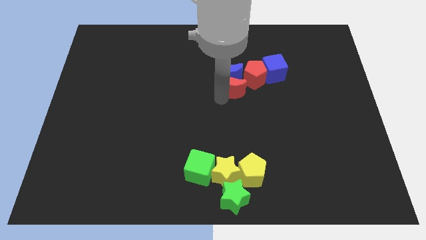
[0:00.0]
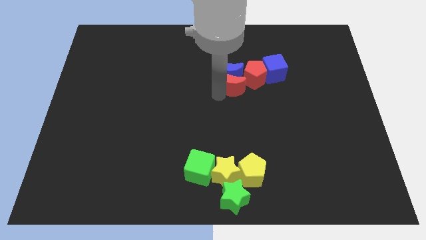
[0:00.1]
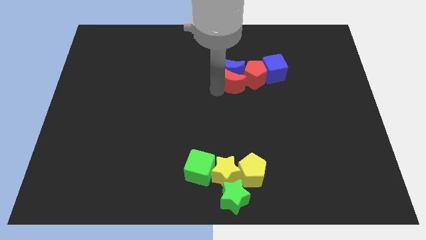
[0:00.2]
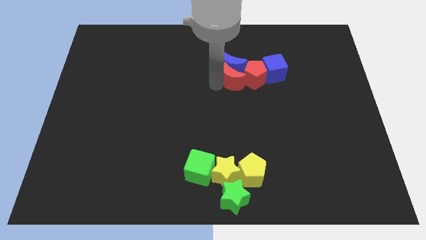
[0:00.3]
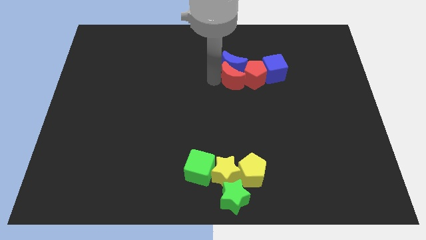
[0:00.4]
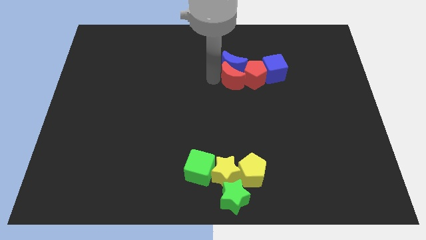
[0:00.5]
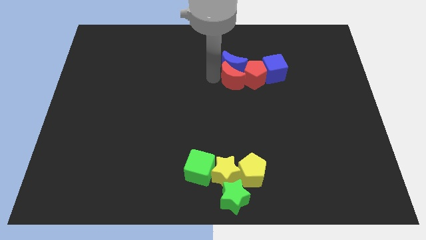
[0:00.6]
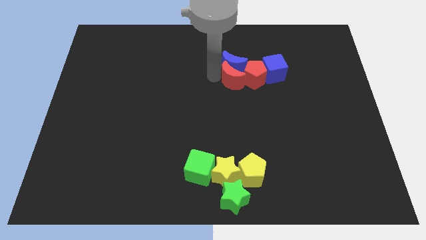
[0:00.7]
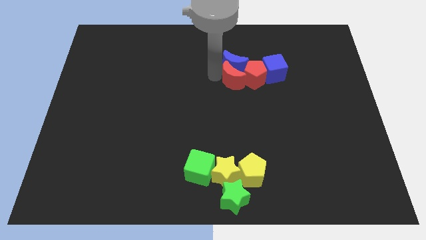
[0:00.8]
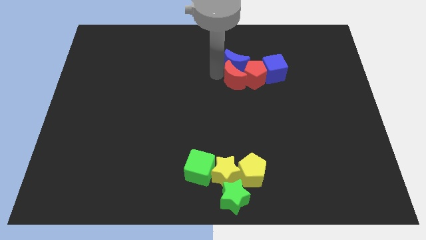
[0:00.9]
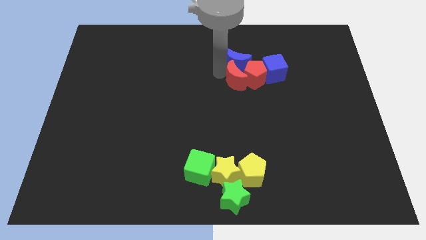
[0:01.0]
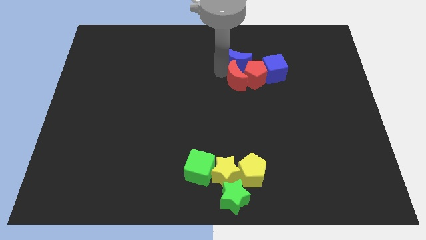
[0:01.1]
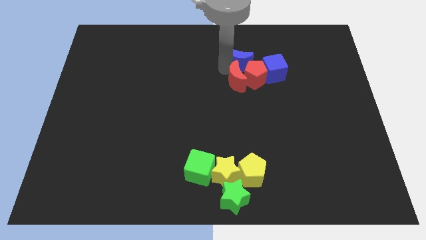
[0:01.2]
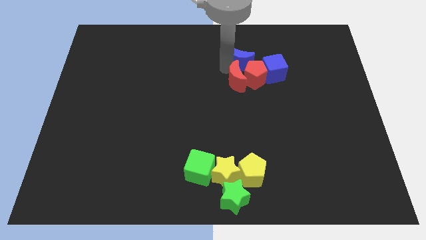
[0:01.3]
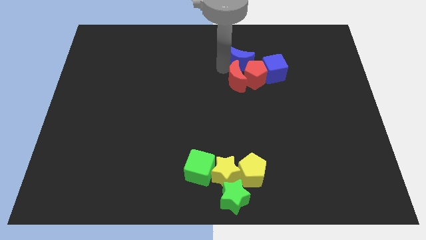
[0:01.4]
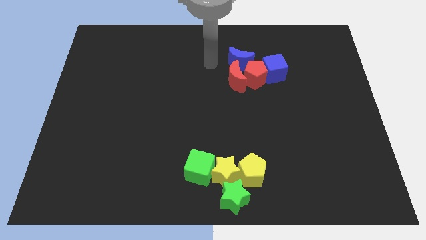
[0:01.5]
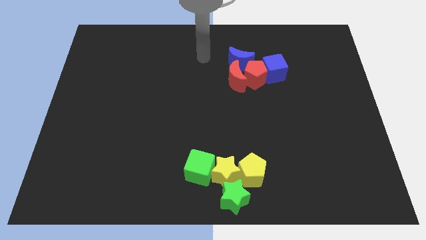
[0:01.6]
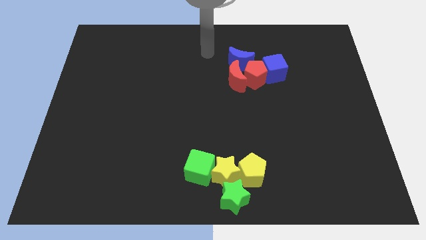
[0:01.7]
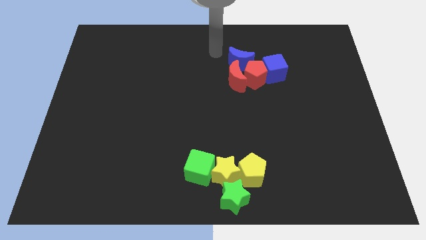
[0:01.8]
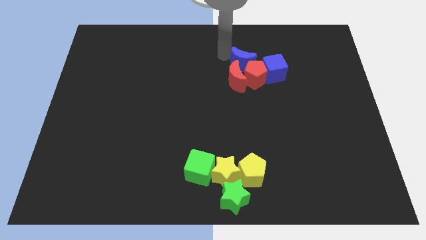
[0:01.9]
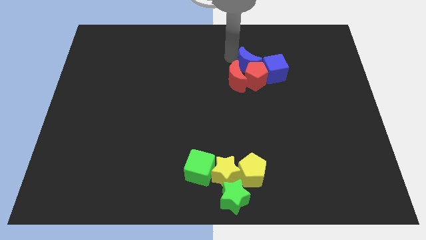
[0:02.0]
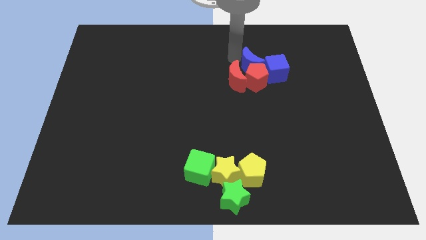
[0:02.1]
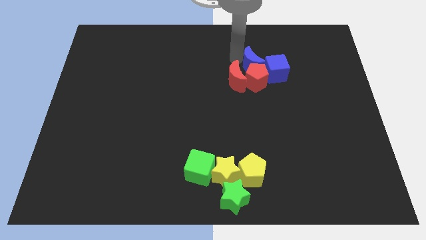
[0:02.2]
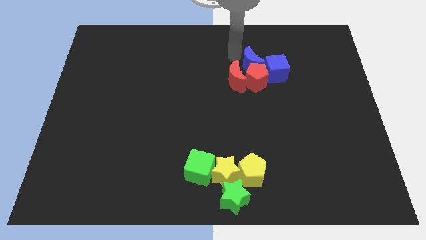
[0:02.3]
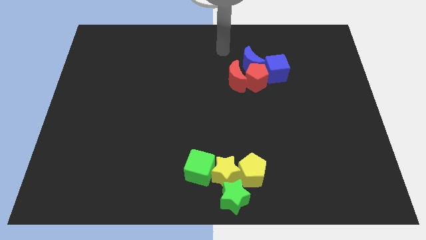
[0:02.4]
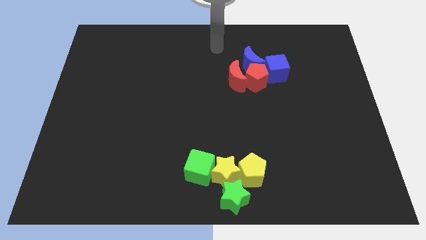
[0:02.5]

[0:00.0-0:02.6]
move blue moon above the red pentagon

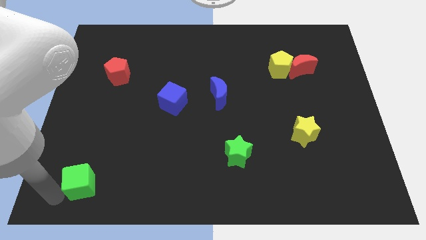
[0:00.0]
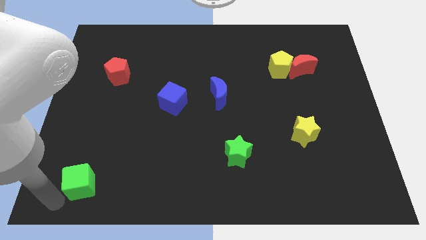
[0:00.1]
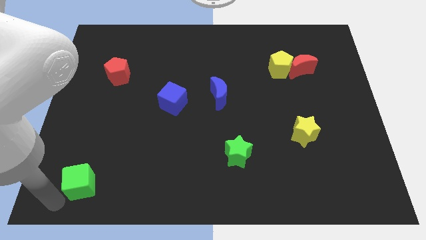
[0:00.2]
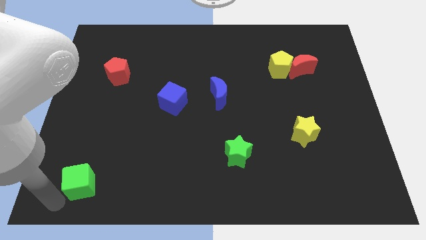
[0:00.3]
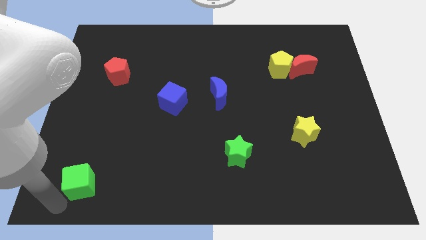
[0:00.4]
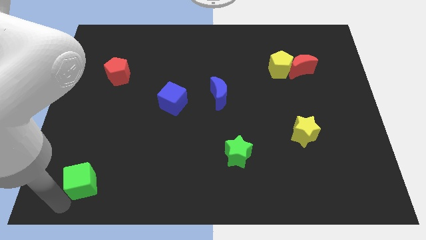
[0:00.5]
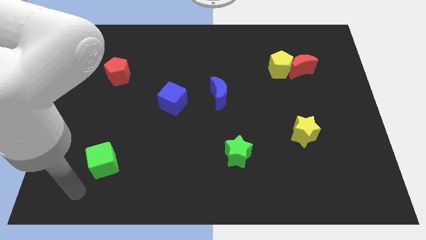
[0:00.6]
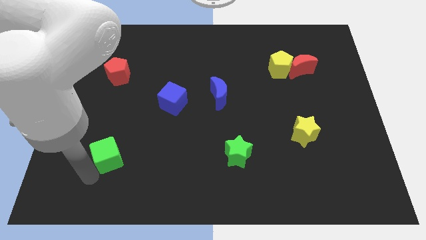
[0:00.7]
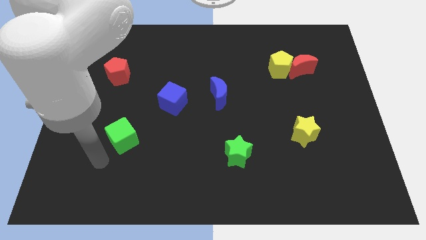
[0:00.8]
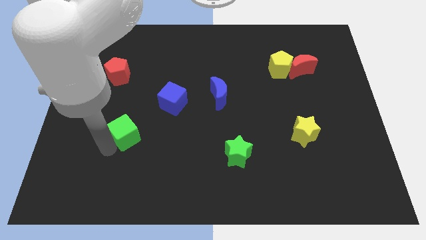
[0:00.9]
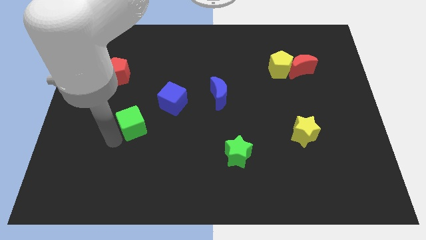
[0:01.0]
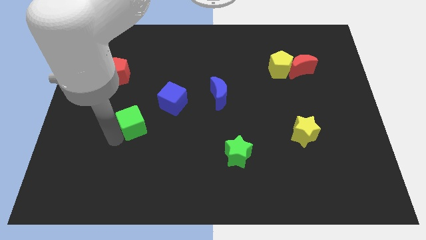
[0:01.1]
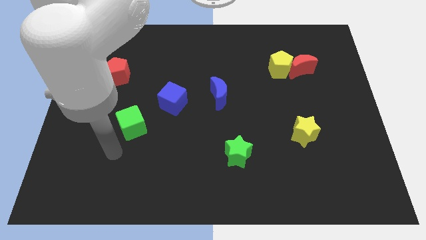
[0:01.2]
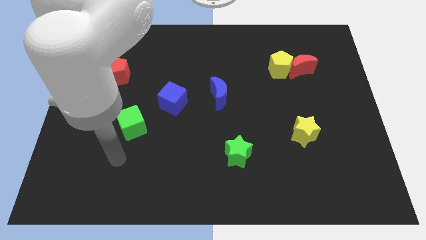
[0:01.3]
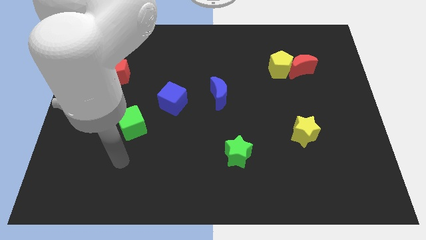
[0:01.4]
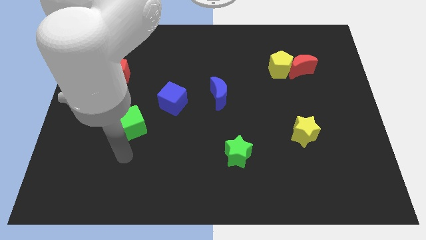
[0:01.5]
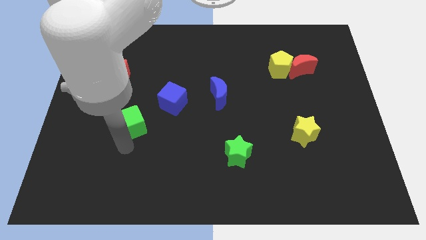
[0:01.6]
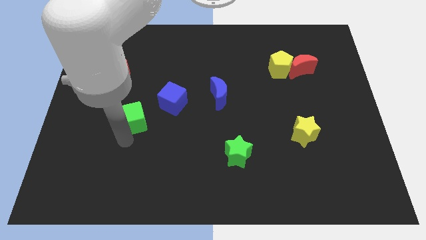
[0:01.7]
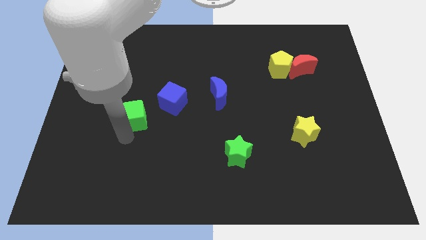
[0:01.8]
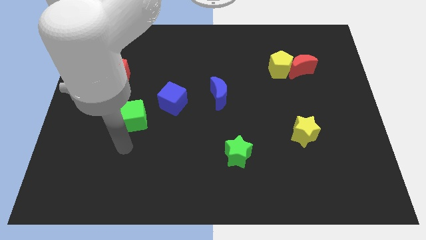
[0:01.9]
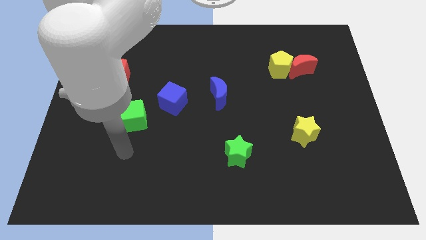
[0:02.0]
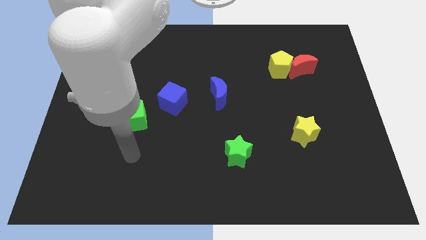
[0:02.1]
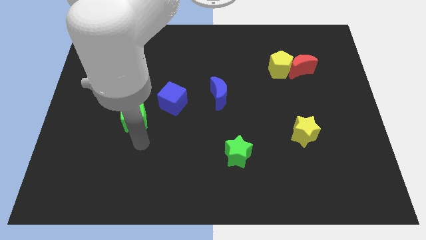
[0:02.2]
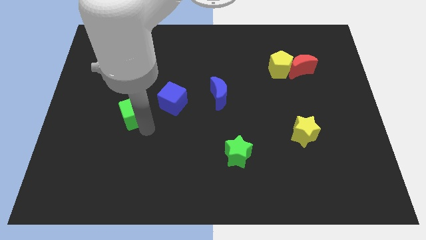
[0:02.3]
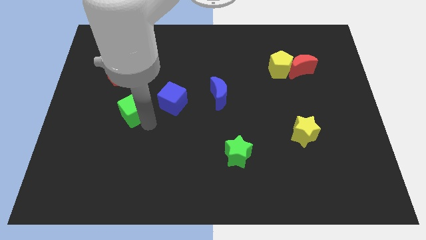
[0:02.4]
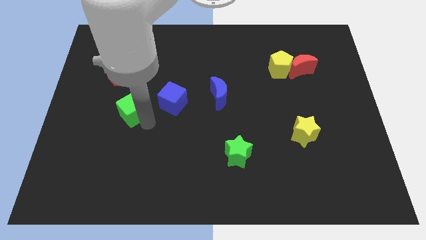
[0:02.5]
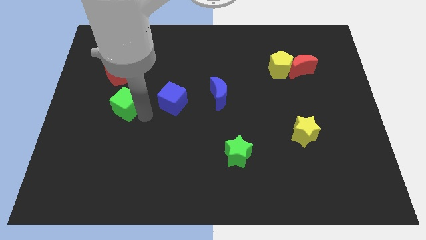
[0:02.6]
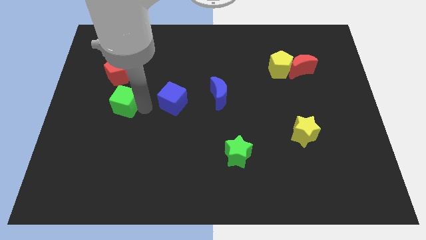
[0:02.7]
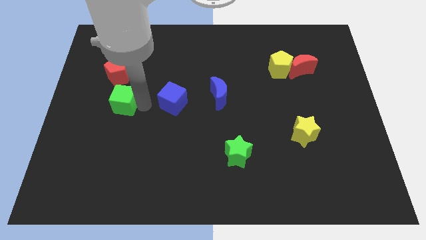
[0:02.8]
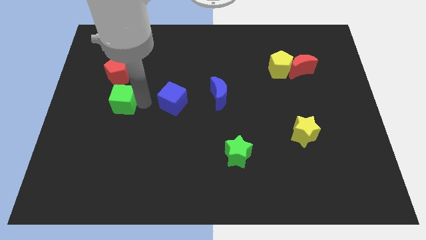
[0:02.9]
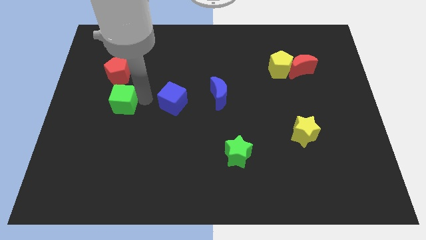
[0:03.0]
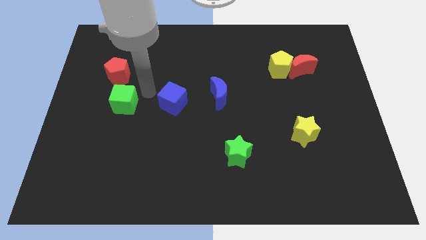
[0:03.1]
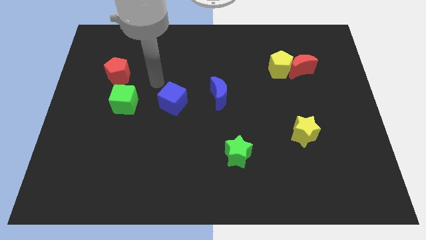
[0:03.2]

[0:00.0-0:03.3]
push the green cube to the left of the blue cube

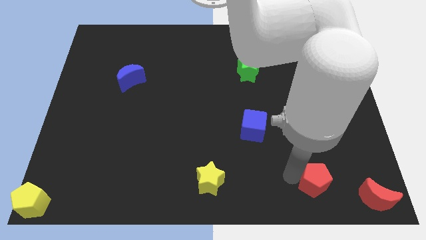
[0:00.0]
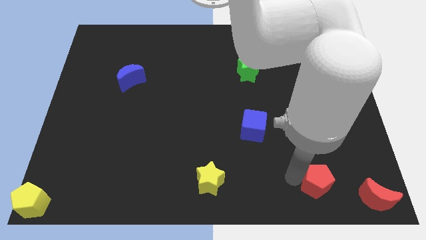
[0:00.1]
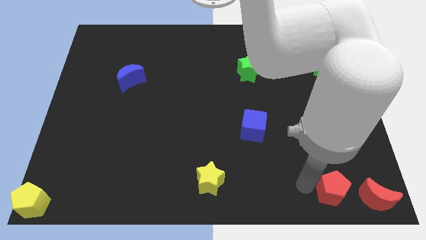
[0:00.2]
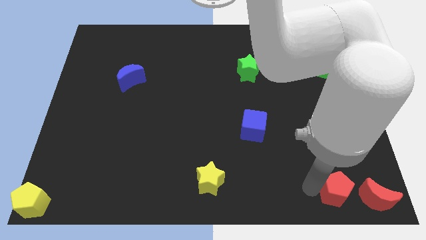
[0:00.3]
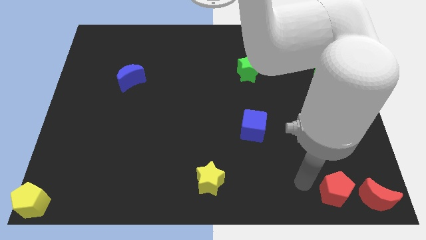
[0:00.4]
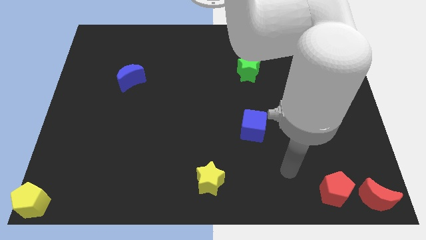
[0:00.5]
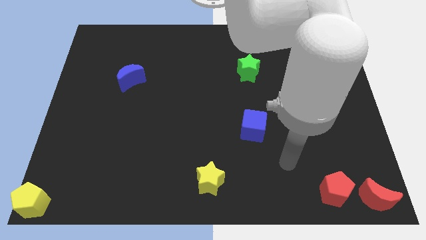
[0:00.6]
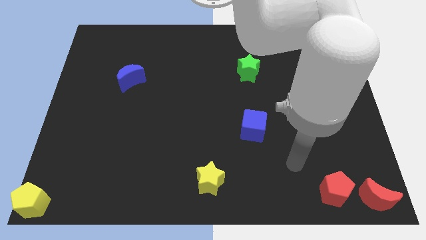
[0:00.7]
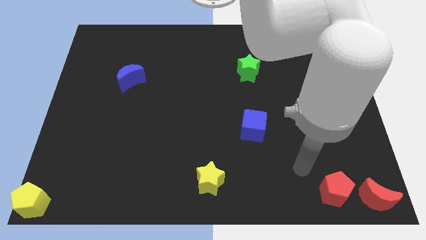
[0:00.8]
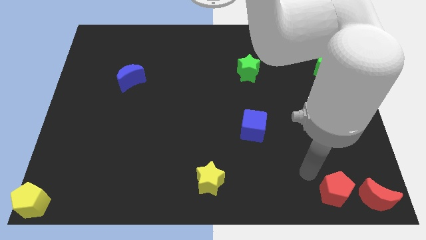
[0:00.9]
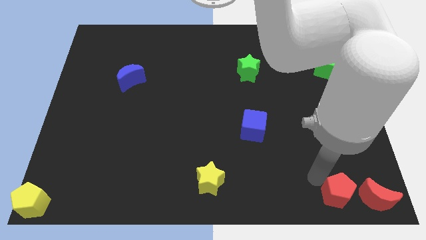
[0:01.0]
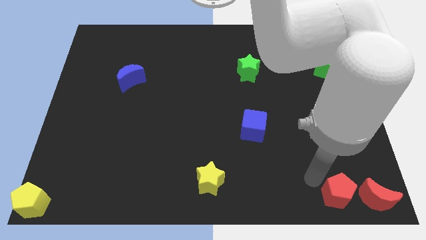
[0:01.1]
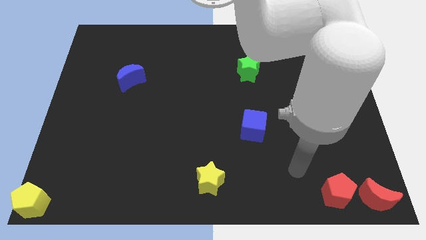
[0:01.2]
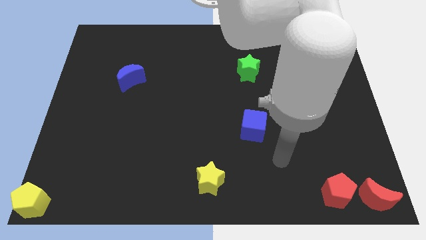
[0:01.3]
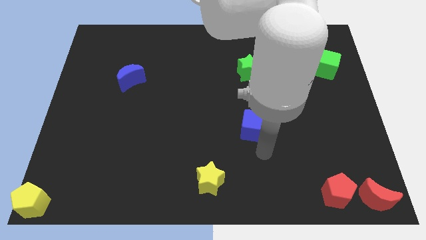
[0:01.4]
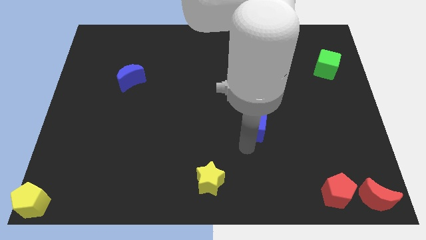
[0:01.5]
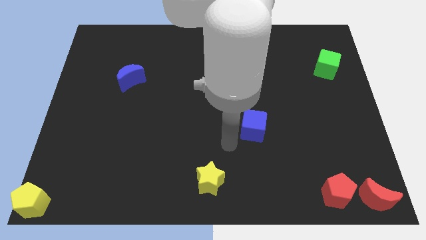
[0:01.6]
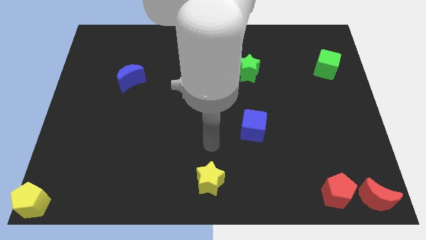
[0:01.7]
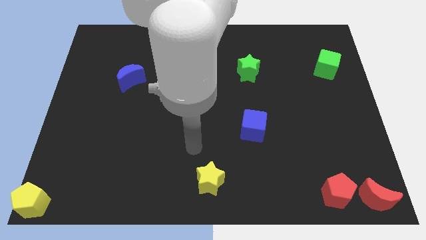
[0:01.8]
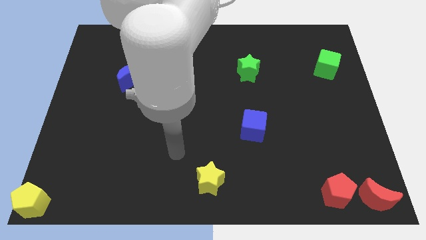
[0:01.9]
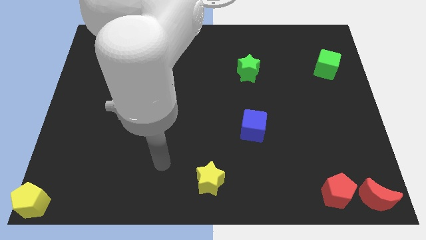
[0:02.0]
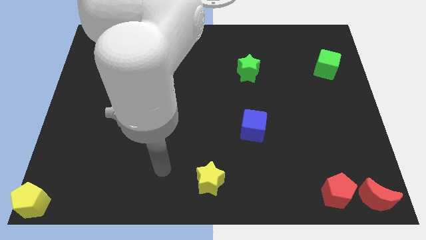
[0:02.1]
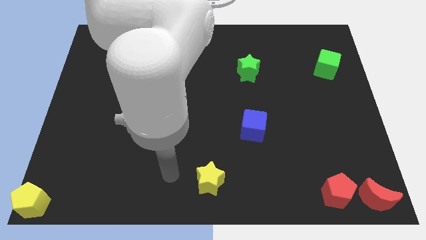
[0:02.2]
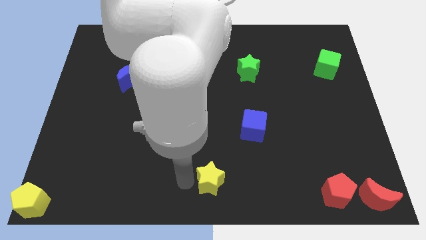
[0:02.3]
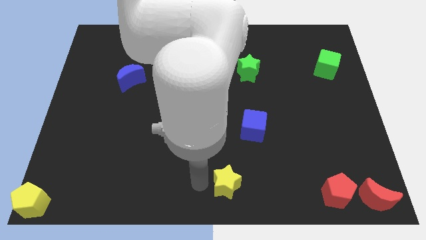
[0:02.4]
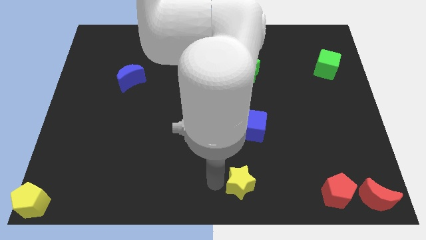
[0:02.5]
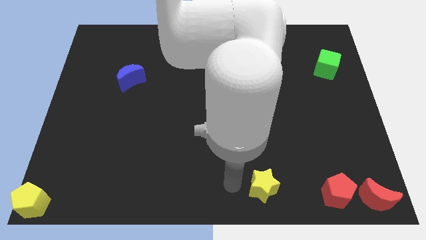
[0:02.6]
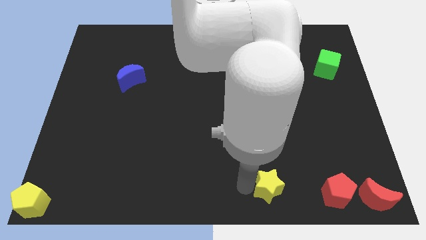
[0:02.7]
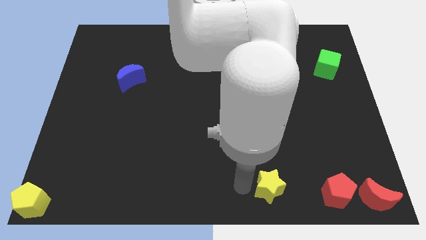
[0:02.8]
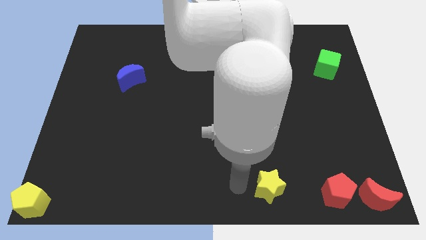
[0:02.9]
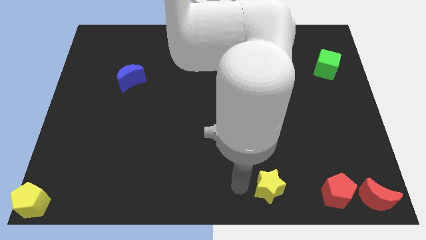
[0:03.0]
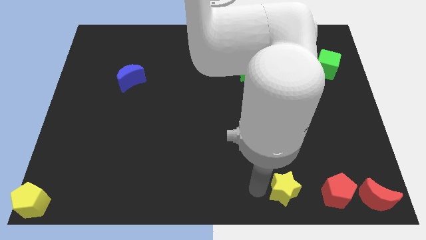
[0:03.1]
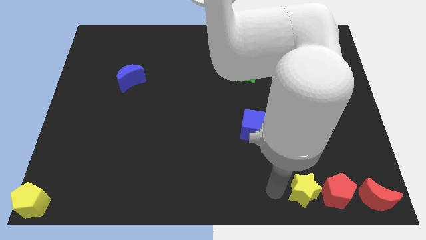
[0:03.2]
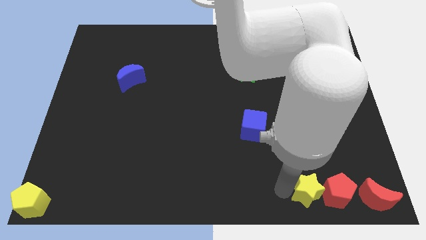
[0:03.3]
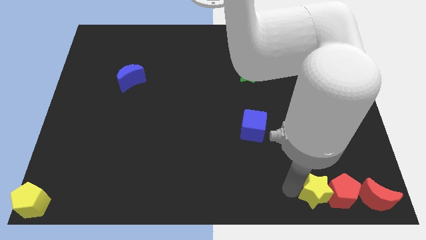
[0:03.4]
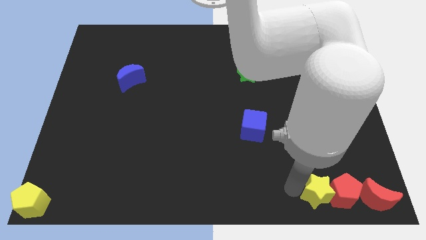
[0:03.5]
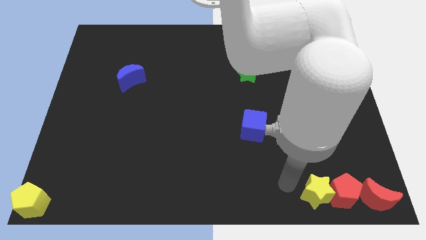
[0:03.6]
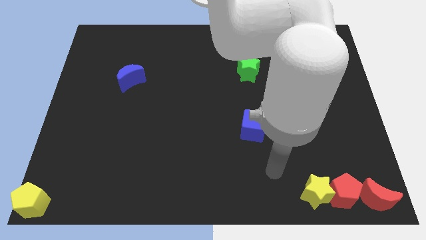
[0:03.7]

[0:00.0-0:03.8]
push the yellow star and red pentagon towards the left side of the red moon
